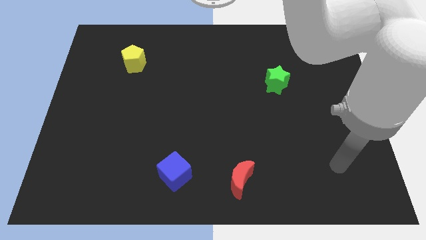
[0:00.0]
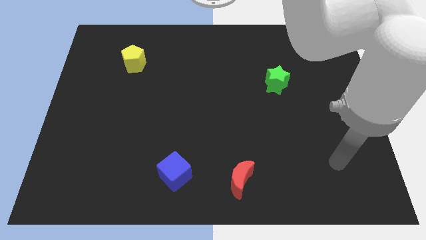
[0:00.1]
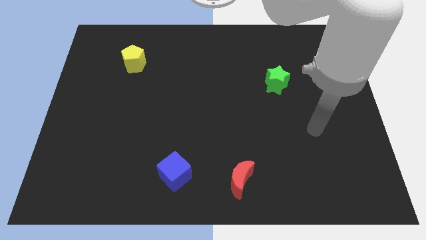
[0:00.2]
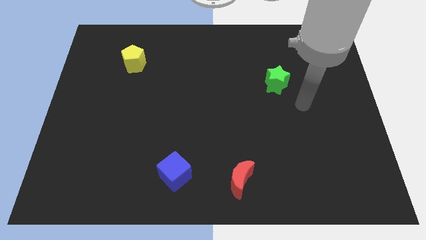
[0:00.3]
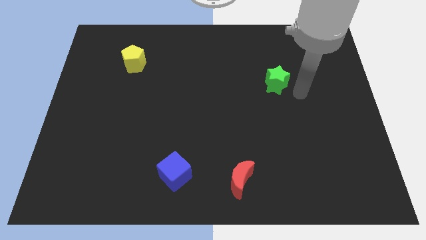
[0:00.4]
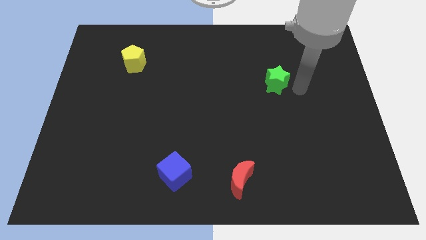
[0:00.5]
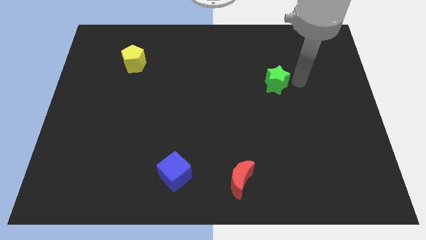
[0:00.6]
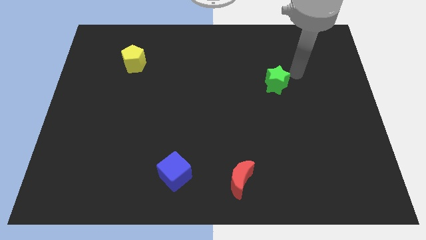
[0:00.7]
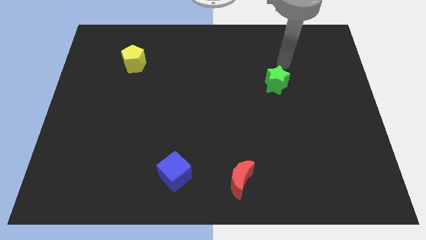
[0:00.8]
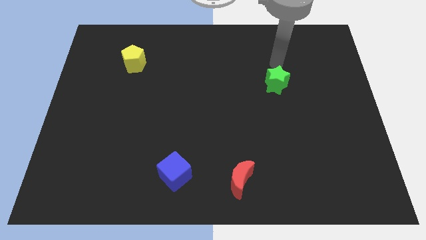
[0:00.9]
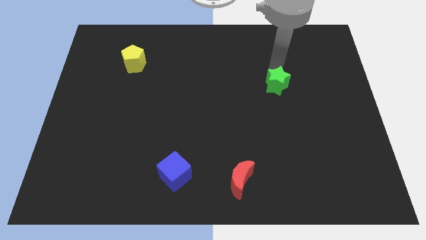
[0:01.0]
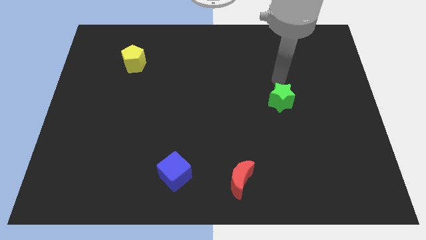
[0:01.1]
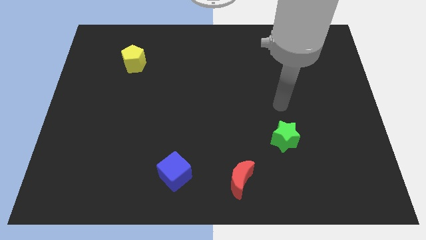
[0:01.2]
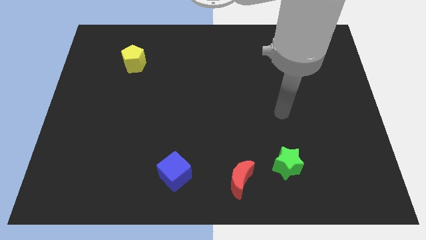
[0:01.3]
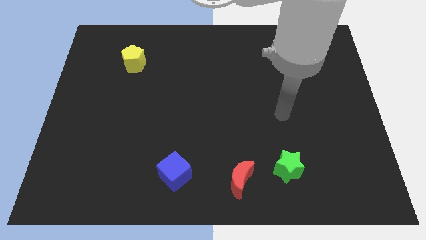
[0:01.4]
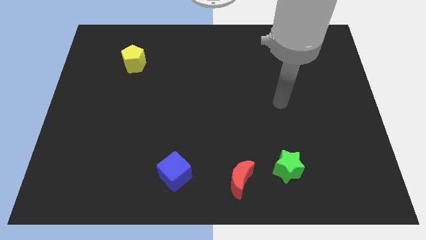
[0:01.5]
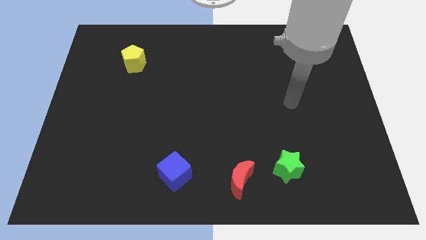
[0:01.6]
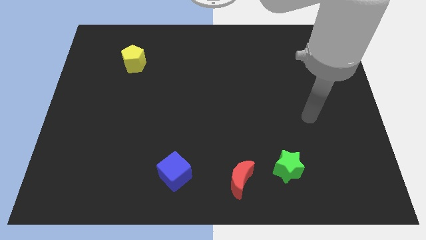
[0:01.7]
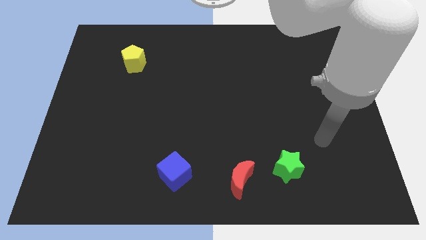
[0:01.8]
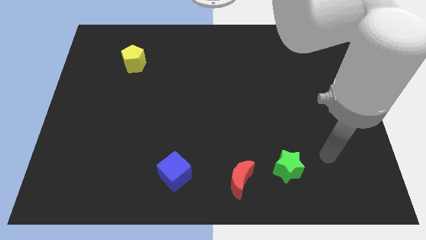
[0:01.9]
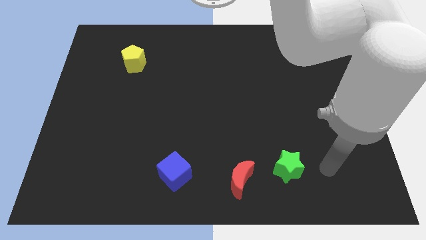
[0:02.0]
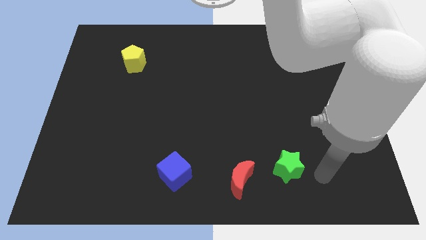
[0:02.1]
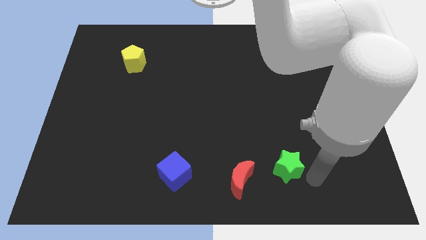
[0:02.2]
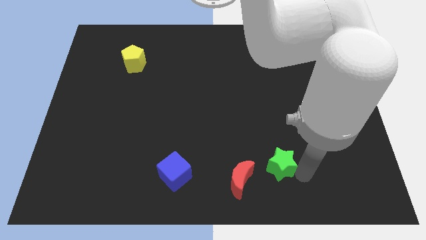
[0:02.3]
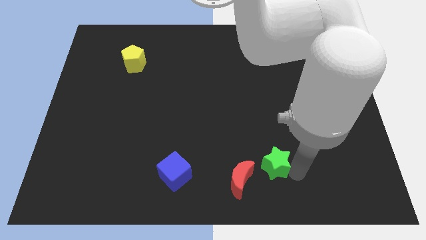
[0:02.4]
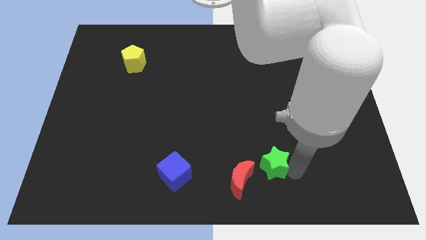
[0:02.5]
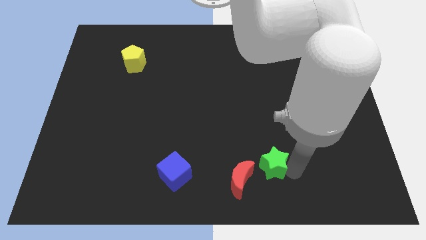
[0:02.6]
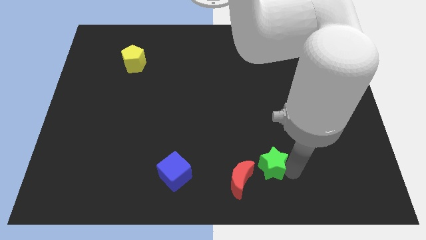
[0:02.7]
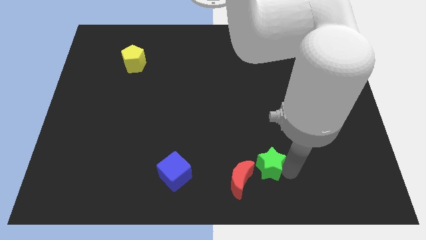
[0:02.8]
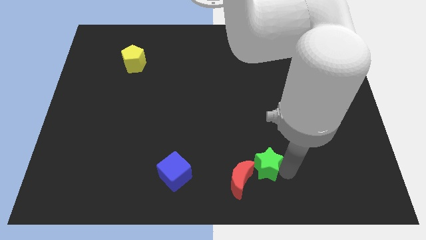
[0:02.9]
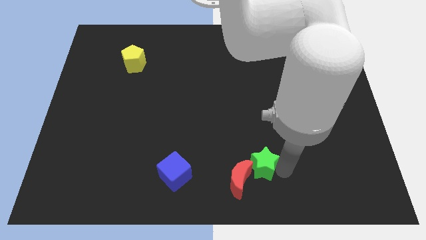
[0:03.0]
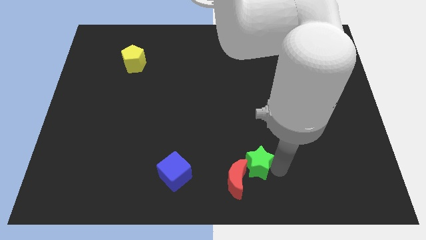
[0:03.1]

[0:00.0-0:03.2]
slide the star to the moon

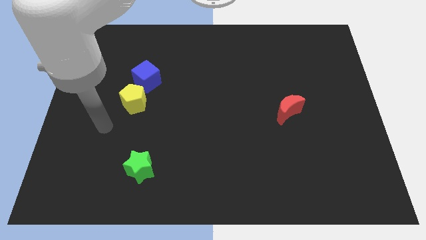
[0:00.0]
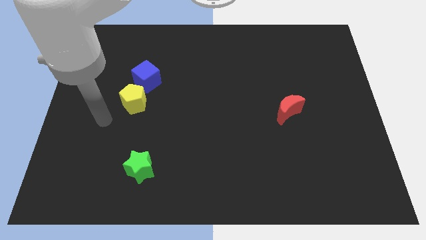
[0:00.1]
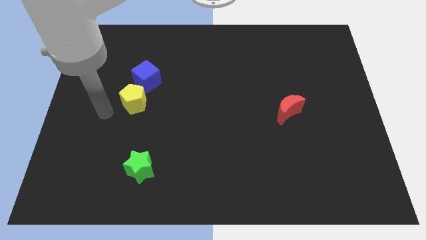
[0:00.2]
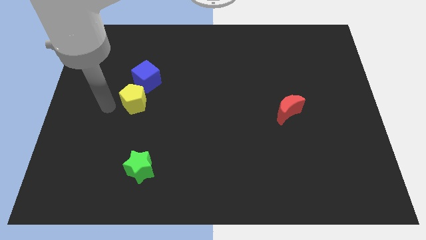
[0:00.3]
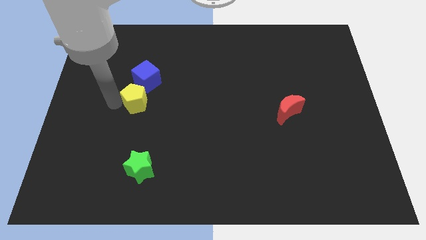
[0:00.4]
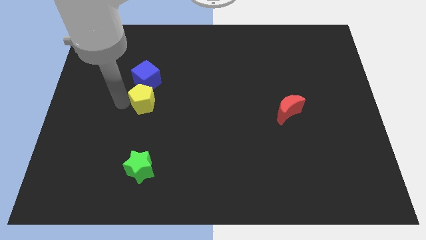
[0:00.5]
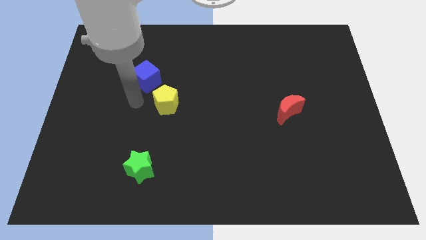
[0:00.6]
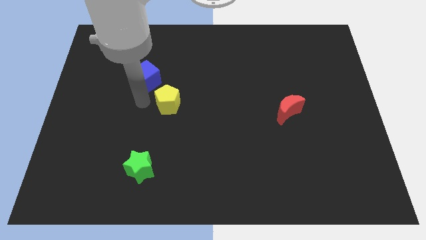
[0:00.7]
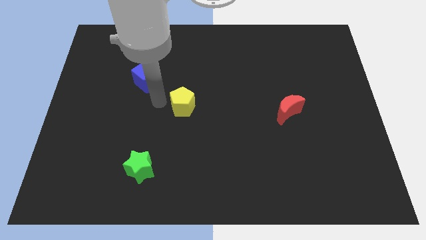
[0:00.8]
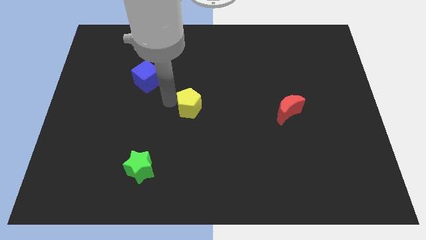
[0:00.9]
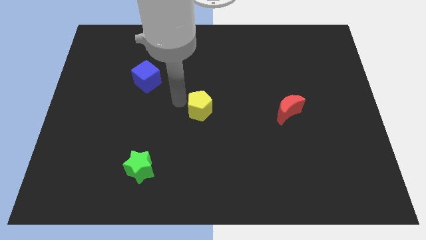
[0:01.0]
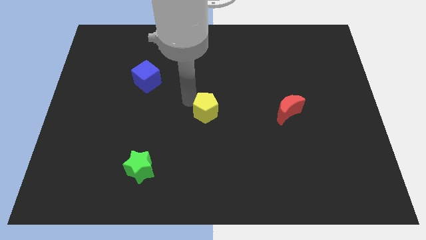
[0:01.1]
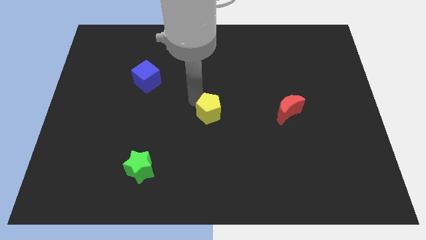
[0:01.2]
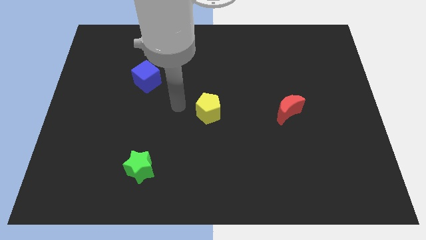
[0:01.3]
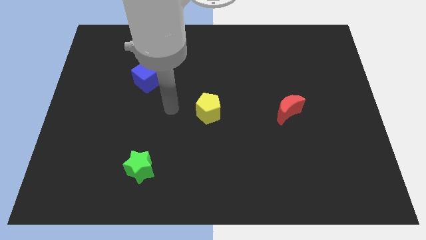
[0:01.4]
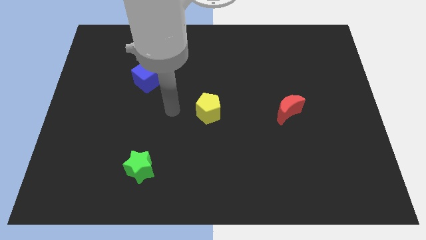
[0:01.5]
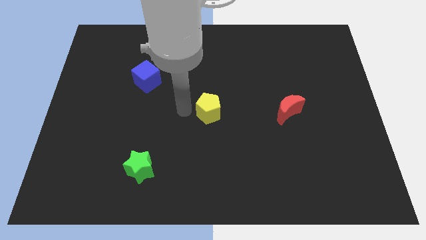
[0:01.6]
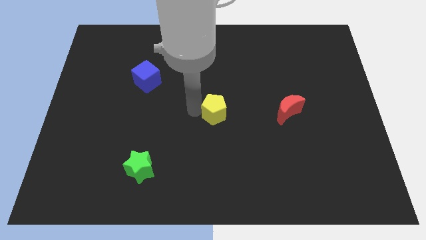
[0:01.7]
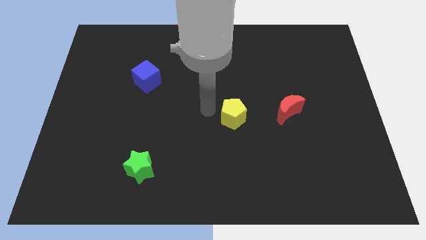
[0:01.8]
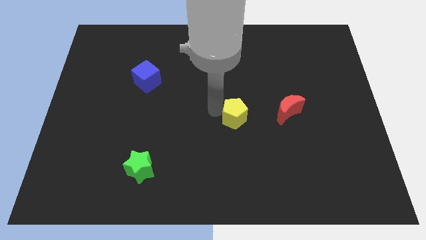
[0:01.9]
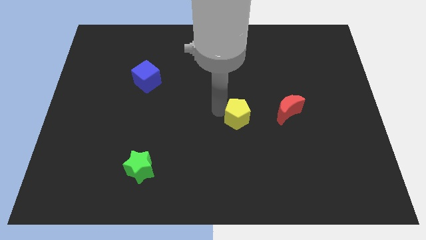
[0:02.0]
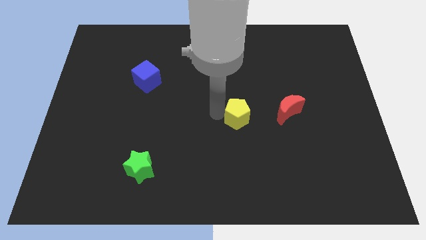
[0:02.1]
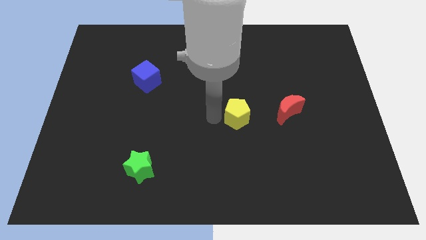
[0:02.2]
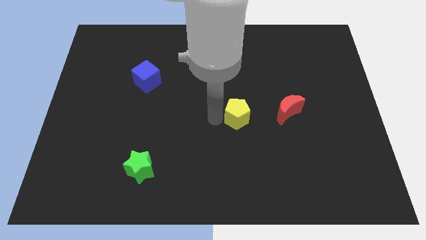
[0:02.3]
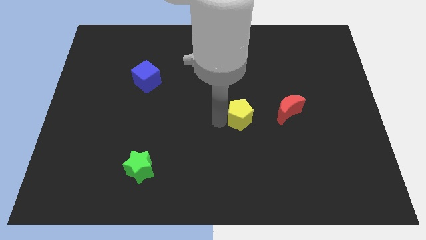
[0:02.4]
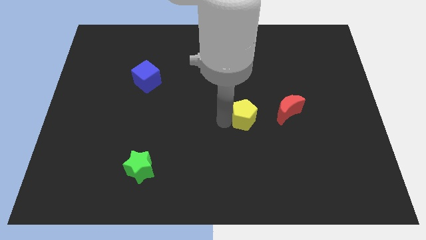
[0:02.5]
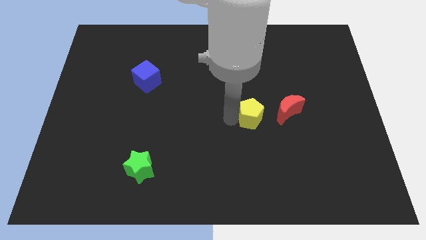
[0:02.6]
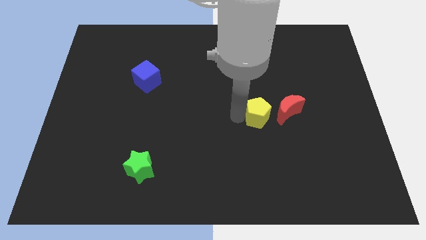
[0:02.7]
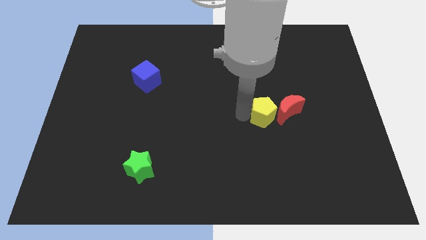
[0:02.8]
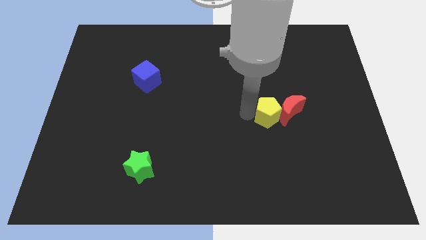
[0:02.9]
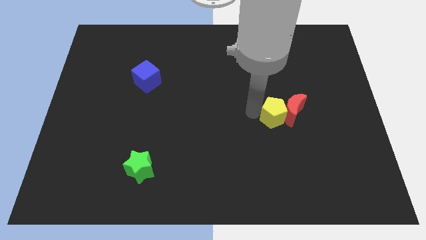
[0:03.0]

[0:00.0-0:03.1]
slide the yellow pentagon next to the moon

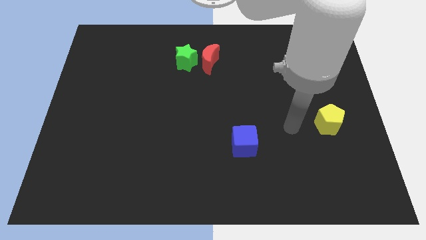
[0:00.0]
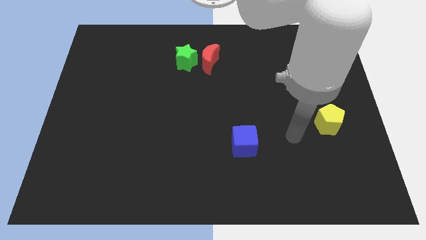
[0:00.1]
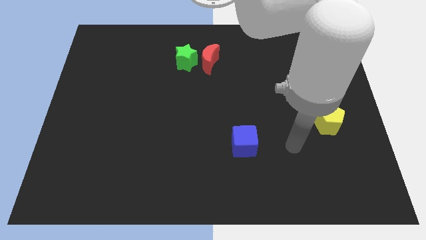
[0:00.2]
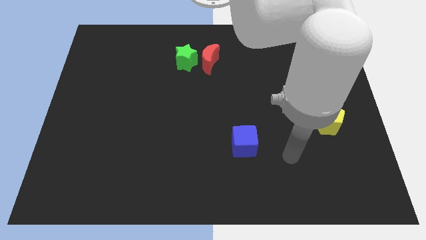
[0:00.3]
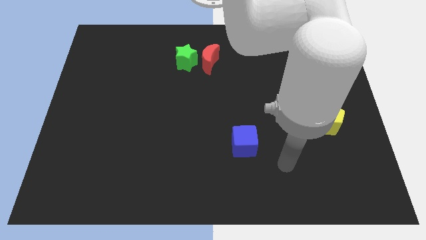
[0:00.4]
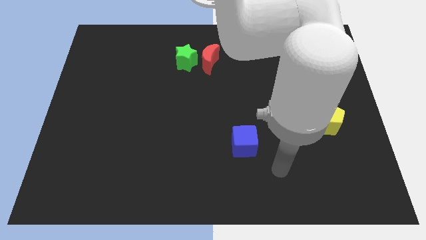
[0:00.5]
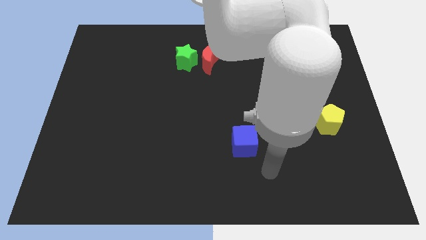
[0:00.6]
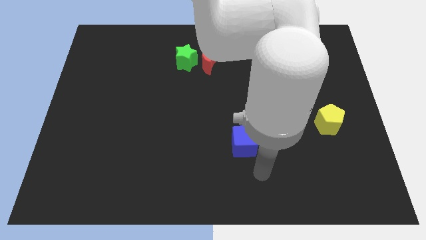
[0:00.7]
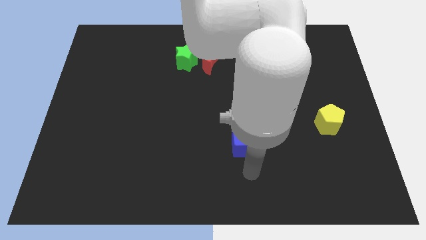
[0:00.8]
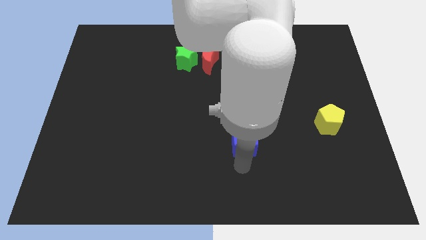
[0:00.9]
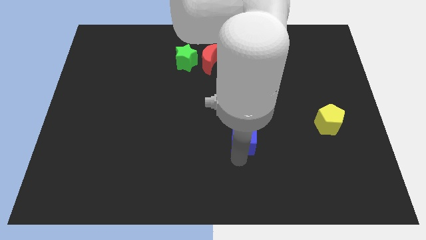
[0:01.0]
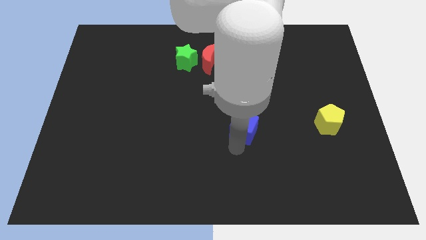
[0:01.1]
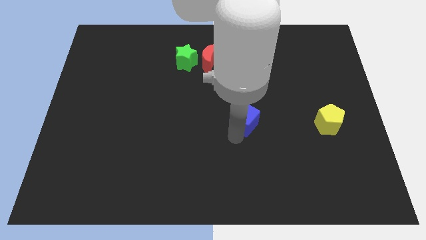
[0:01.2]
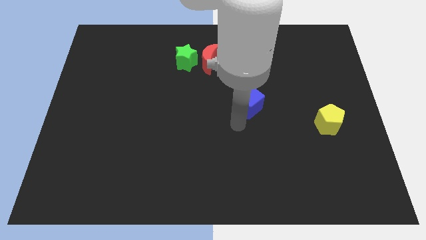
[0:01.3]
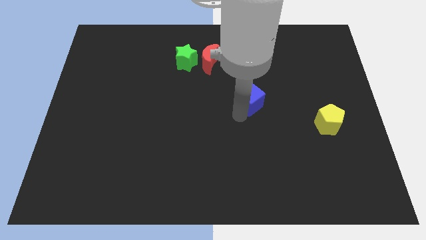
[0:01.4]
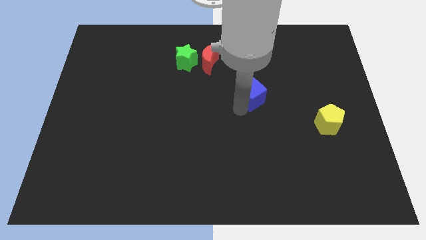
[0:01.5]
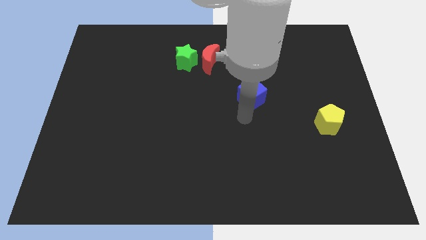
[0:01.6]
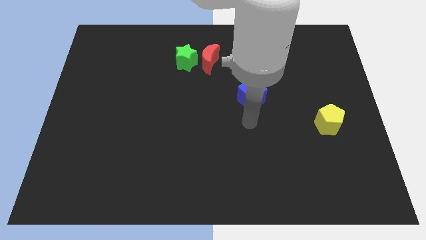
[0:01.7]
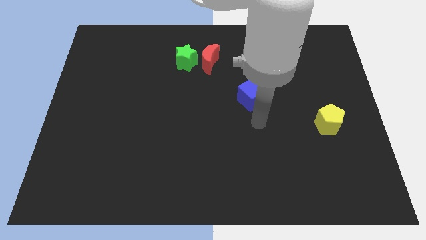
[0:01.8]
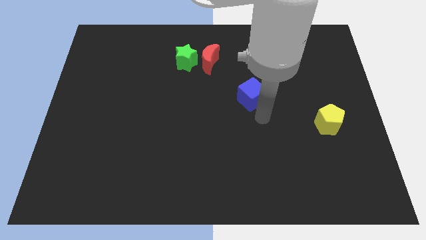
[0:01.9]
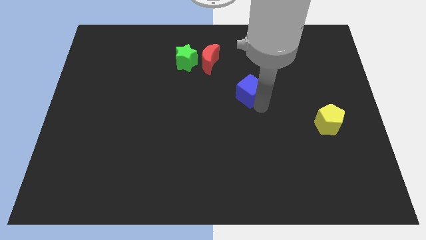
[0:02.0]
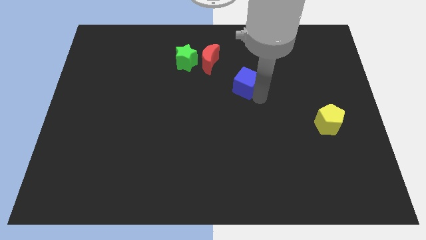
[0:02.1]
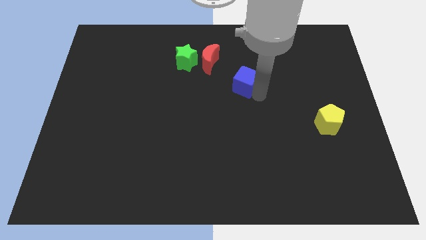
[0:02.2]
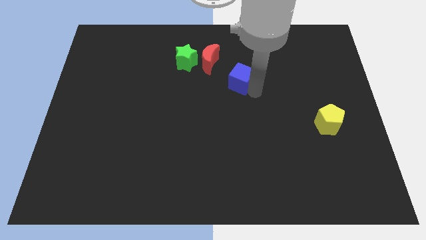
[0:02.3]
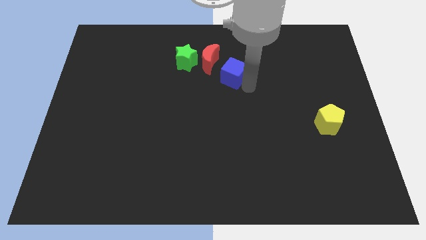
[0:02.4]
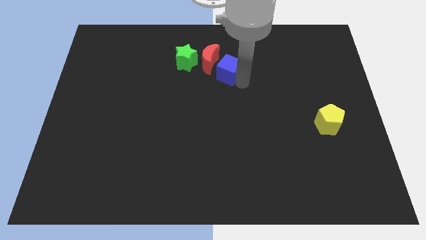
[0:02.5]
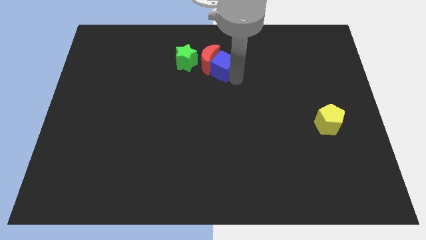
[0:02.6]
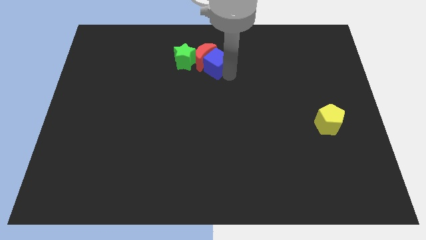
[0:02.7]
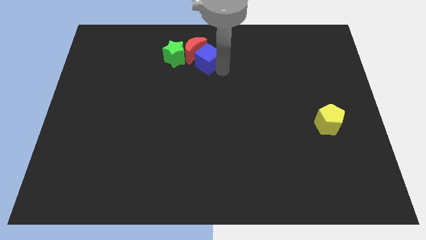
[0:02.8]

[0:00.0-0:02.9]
put the blue block next to the red moon
